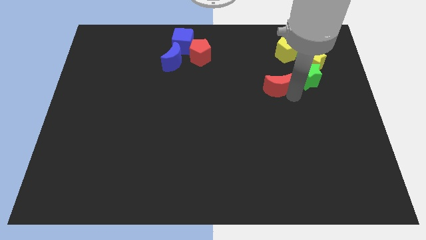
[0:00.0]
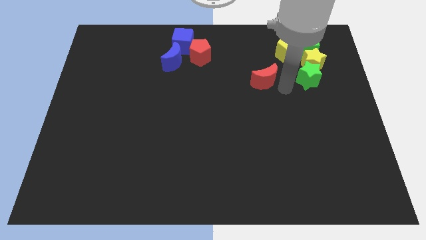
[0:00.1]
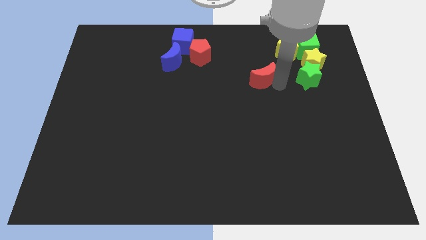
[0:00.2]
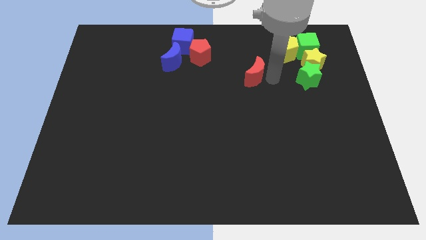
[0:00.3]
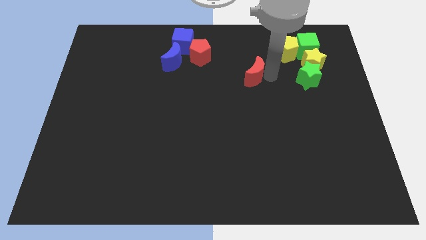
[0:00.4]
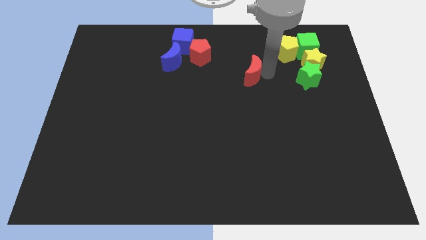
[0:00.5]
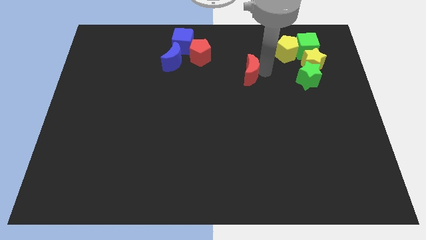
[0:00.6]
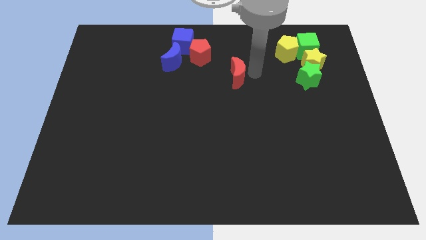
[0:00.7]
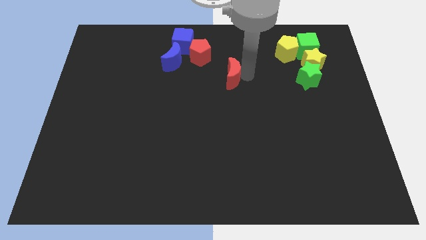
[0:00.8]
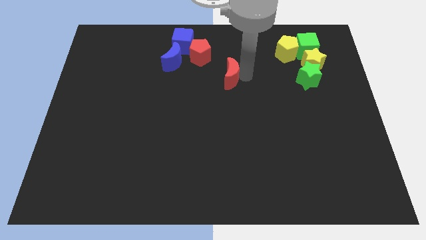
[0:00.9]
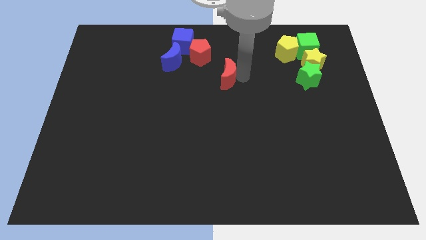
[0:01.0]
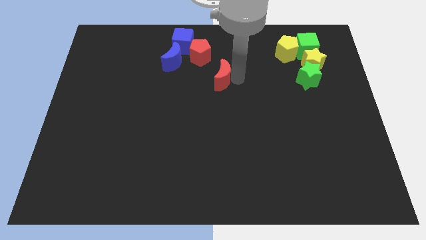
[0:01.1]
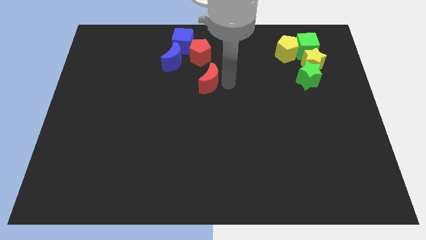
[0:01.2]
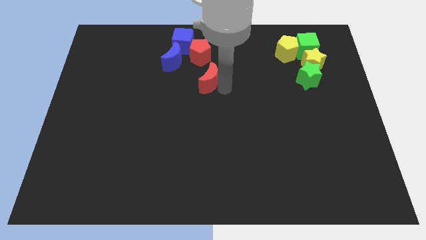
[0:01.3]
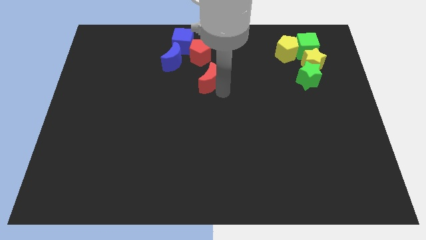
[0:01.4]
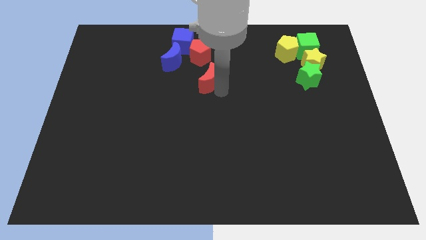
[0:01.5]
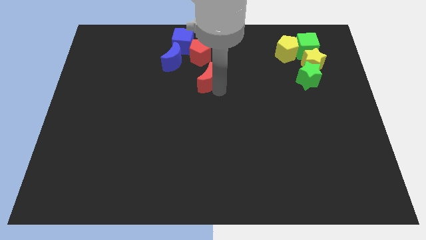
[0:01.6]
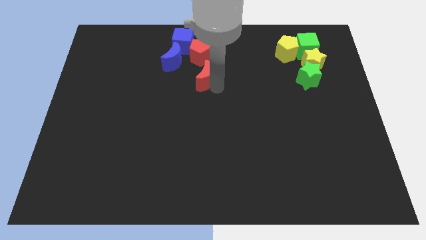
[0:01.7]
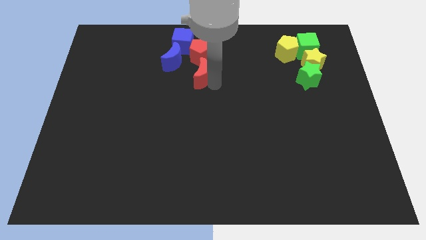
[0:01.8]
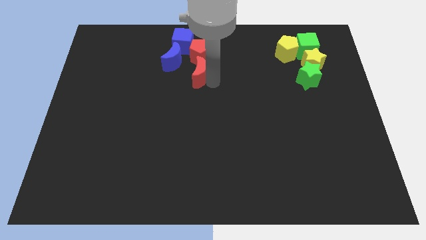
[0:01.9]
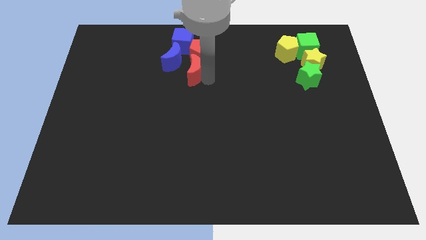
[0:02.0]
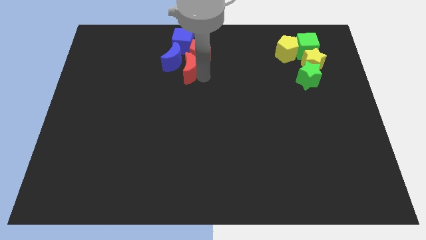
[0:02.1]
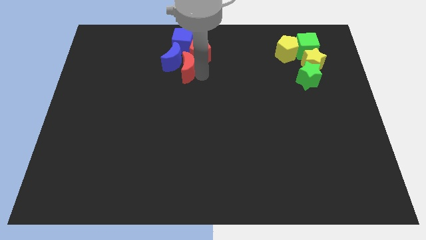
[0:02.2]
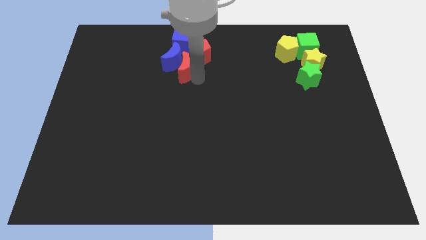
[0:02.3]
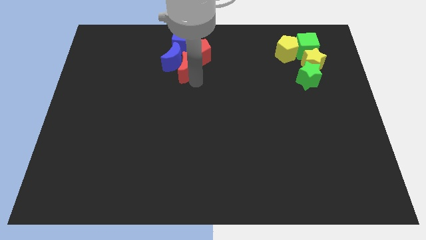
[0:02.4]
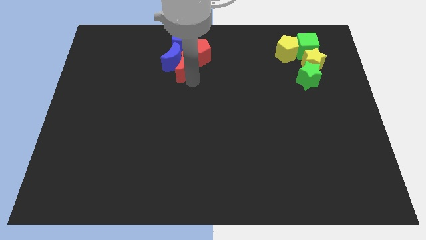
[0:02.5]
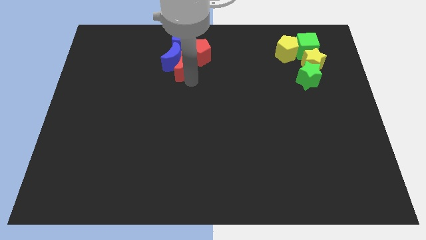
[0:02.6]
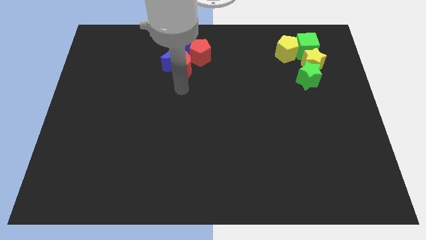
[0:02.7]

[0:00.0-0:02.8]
move the red moon into the blue moon

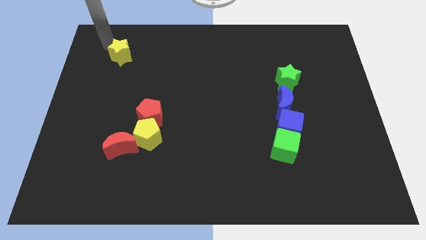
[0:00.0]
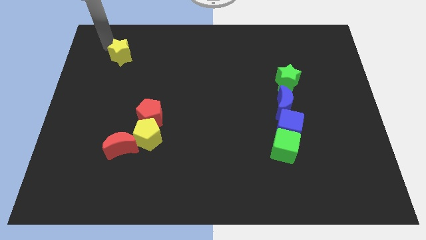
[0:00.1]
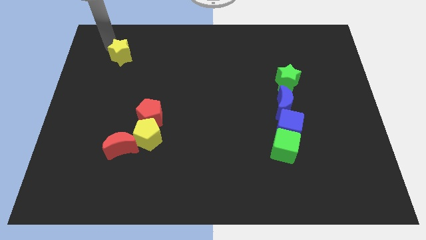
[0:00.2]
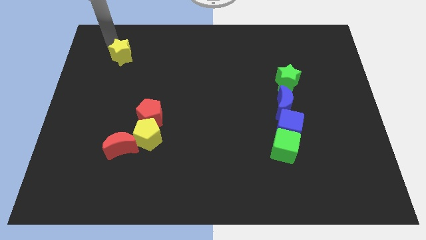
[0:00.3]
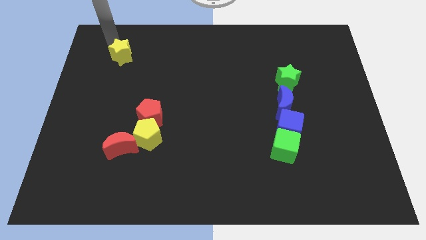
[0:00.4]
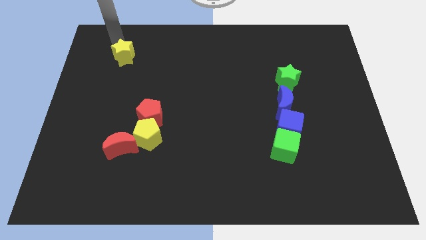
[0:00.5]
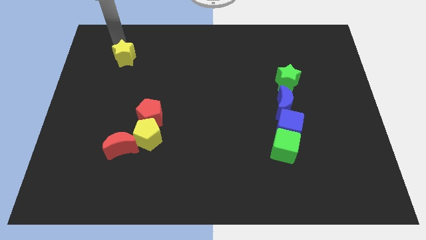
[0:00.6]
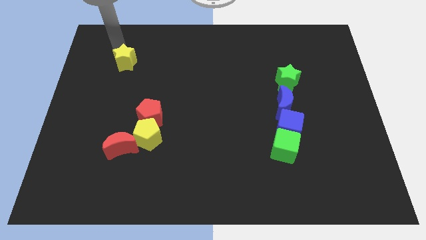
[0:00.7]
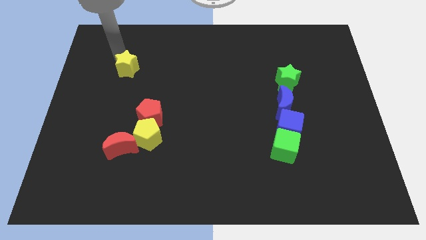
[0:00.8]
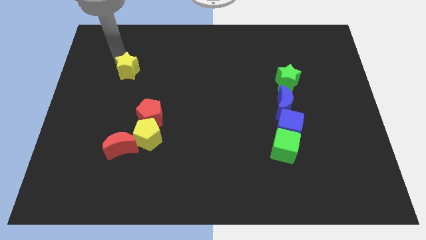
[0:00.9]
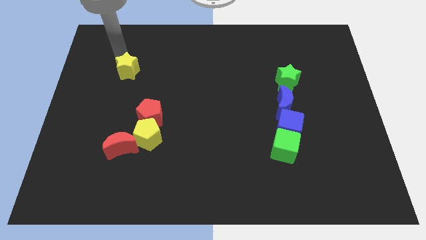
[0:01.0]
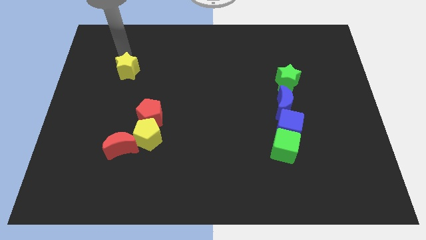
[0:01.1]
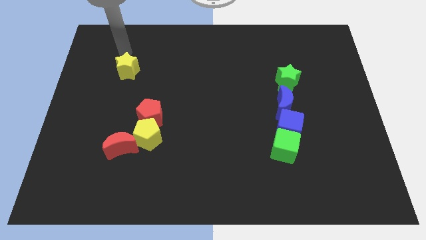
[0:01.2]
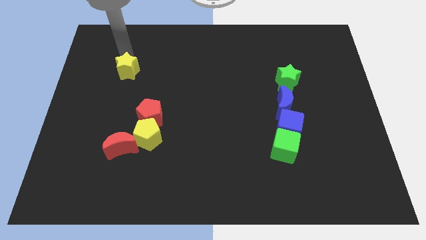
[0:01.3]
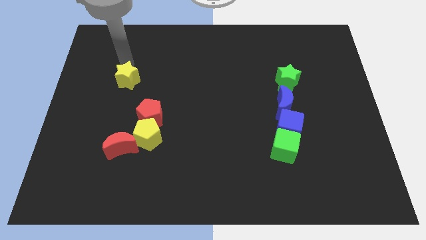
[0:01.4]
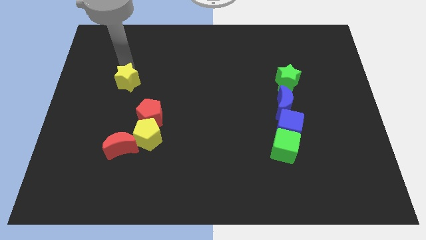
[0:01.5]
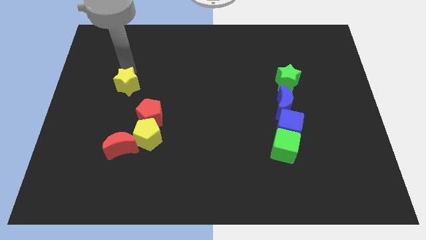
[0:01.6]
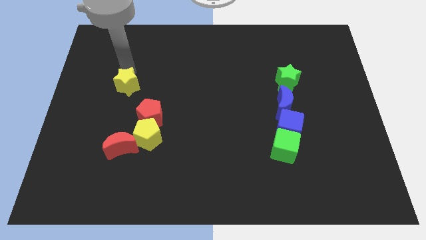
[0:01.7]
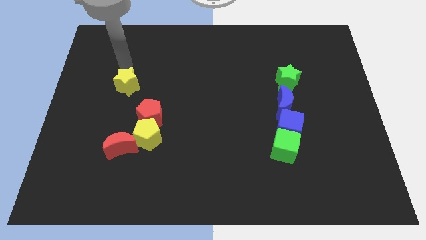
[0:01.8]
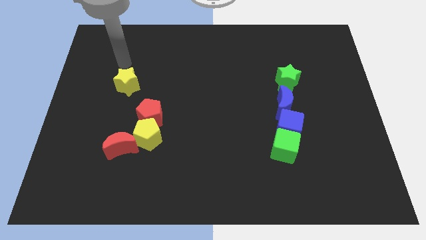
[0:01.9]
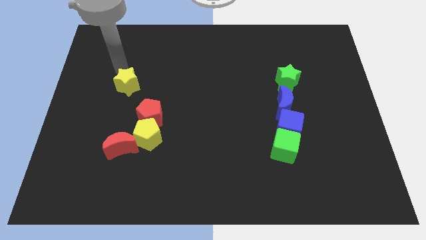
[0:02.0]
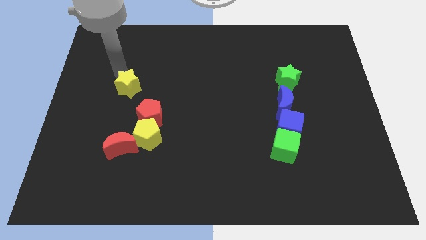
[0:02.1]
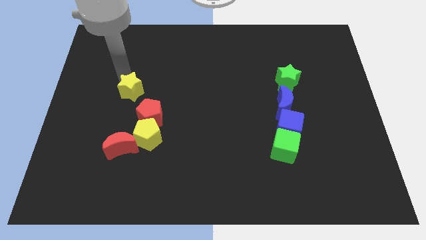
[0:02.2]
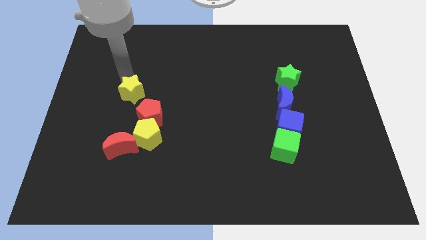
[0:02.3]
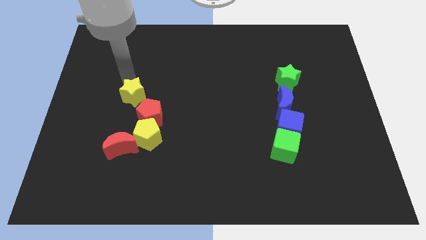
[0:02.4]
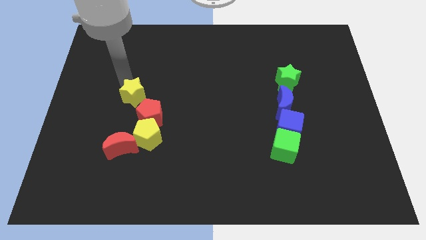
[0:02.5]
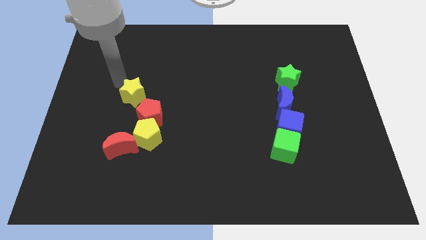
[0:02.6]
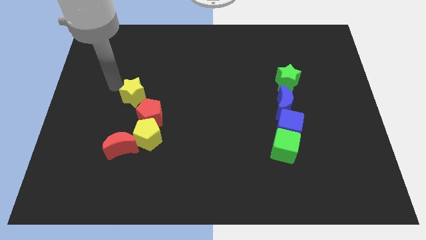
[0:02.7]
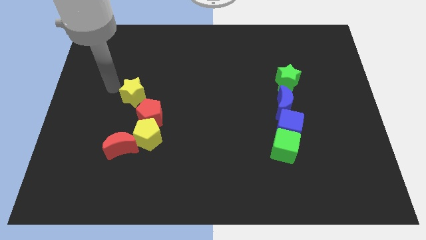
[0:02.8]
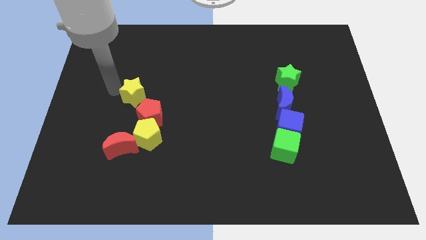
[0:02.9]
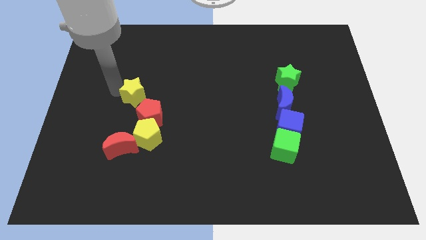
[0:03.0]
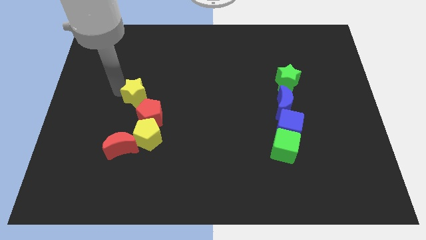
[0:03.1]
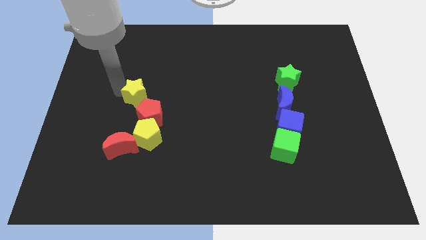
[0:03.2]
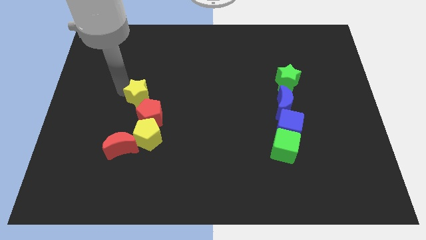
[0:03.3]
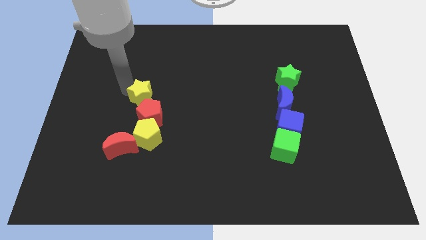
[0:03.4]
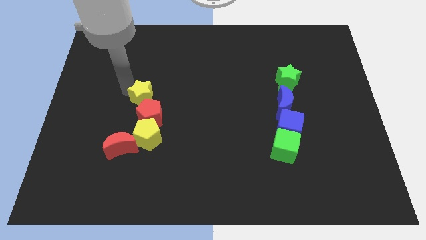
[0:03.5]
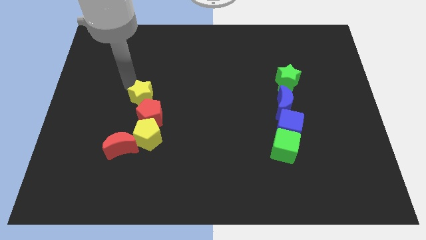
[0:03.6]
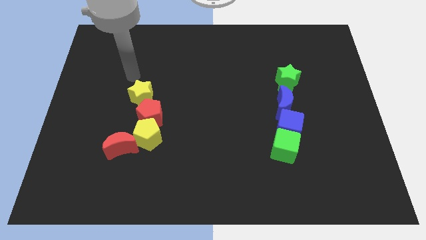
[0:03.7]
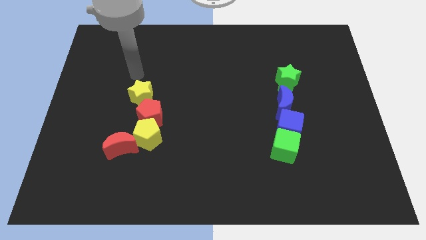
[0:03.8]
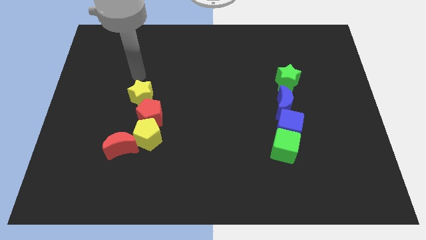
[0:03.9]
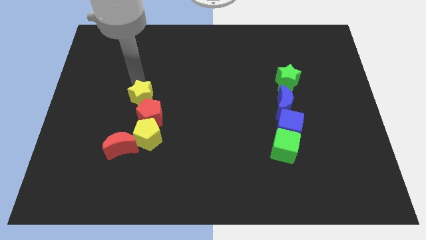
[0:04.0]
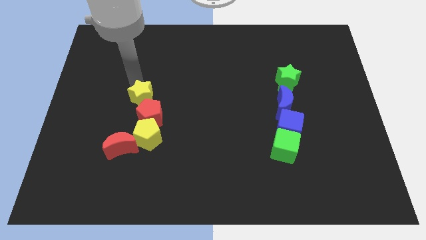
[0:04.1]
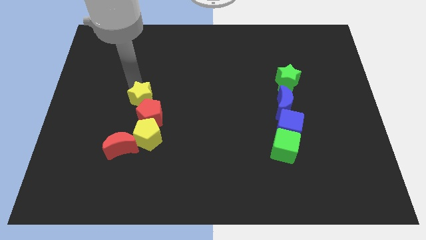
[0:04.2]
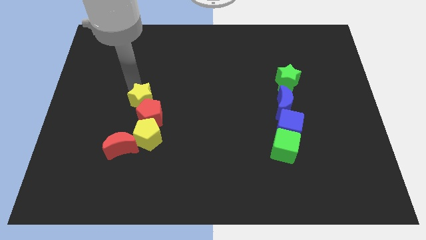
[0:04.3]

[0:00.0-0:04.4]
place the yellow star above the red pentagon

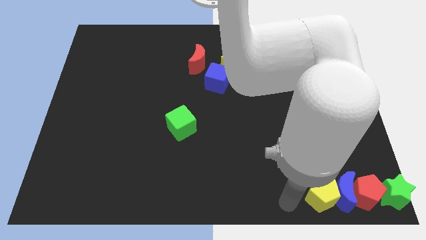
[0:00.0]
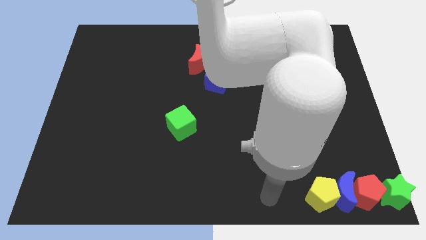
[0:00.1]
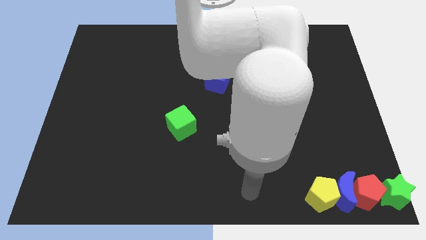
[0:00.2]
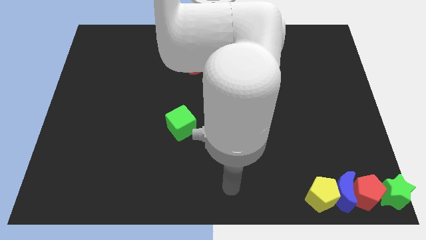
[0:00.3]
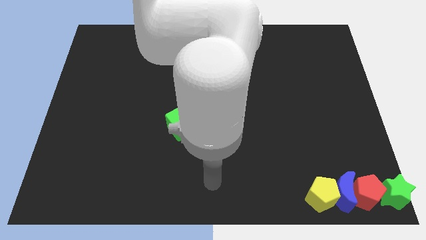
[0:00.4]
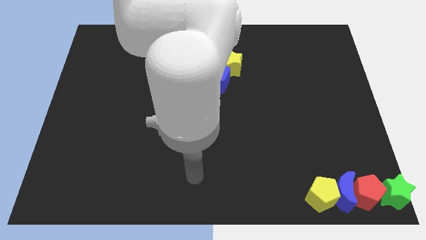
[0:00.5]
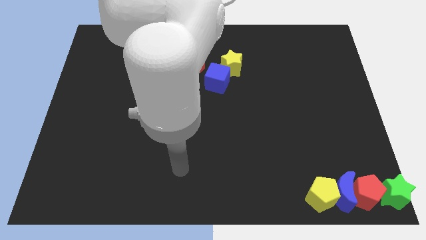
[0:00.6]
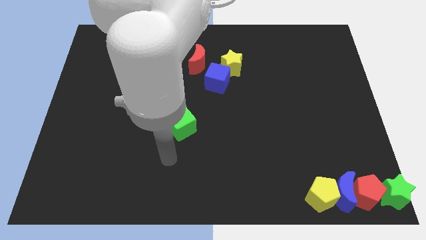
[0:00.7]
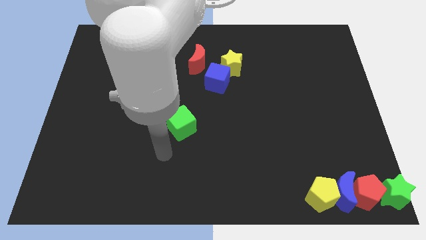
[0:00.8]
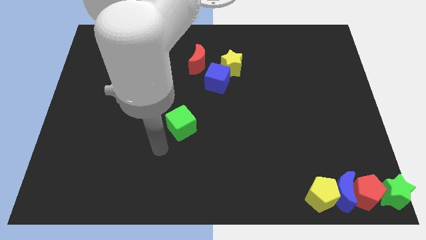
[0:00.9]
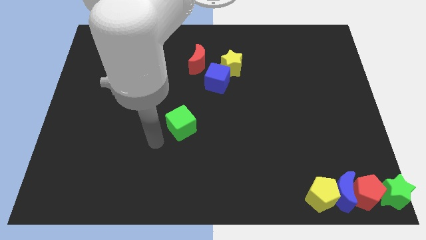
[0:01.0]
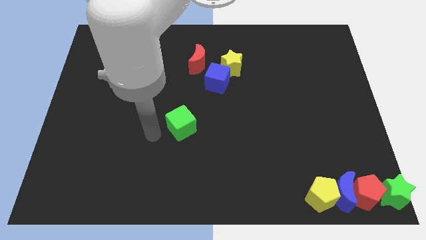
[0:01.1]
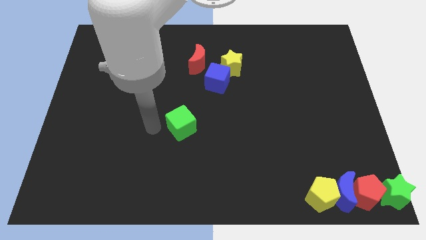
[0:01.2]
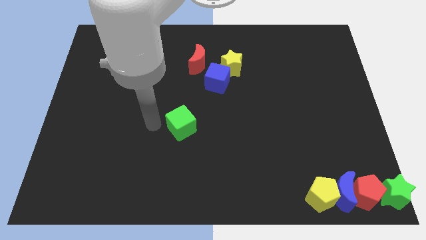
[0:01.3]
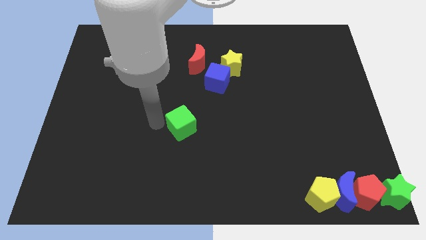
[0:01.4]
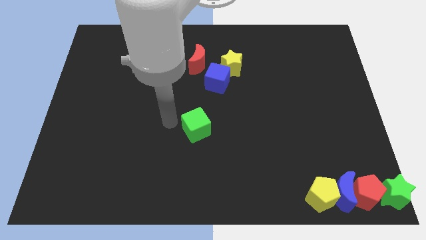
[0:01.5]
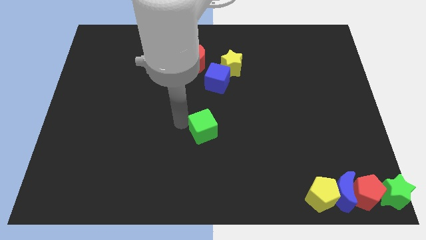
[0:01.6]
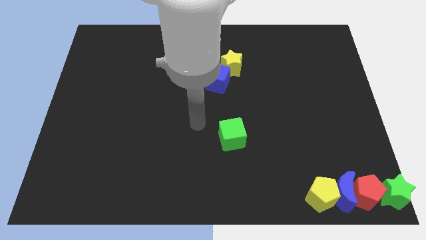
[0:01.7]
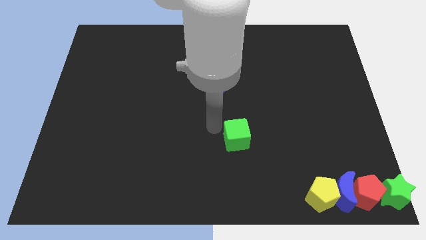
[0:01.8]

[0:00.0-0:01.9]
move the green cube to the bottom of the yellow star
